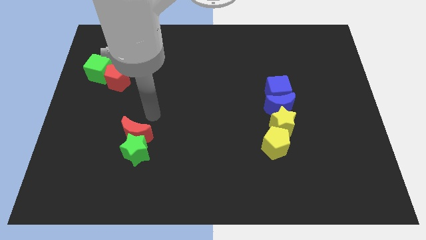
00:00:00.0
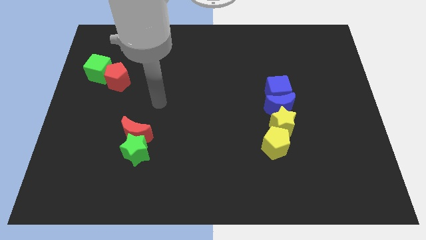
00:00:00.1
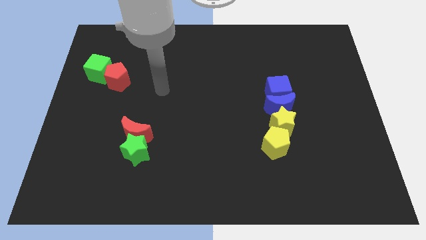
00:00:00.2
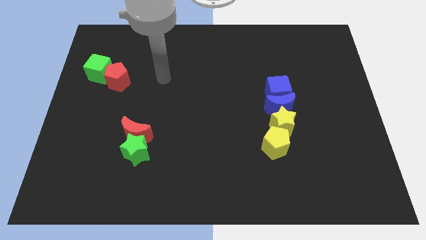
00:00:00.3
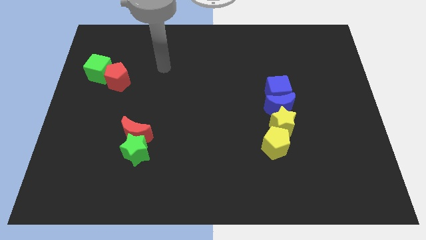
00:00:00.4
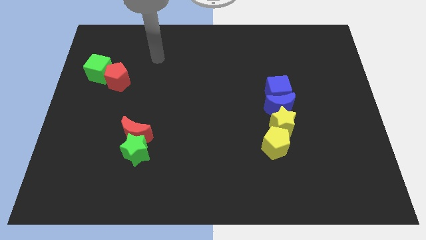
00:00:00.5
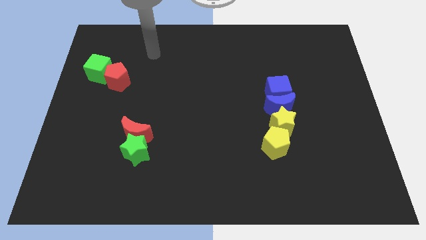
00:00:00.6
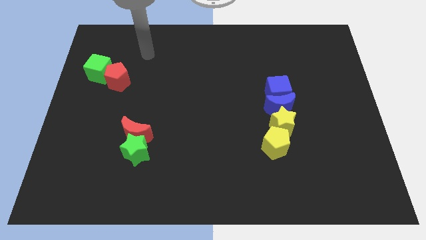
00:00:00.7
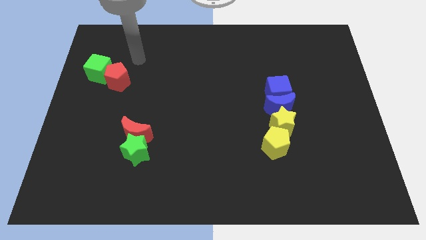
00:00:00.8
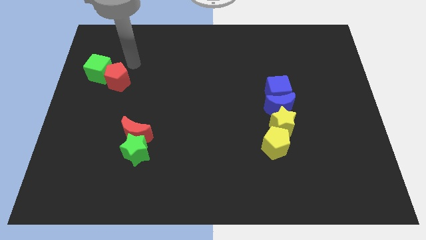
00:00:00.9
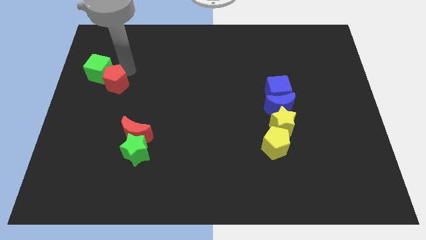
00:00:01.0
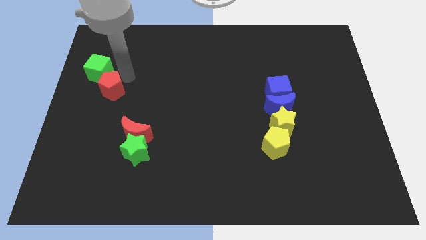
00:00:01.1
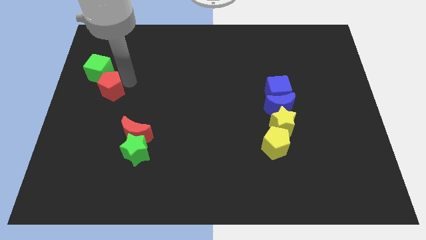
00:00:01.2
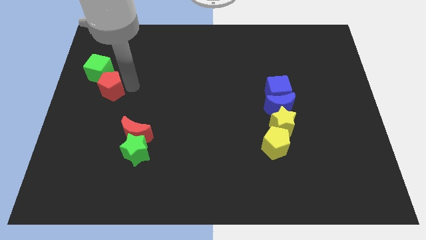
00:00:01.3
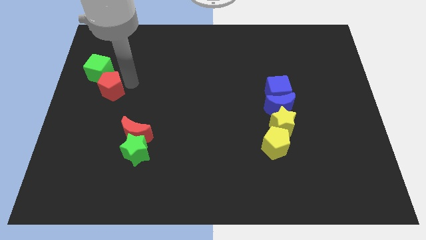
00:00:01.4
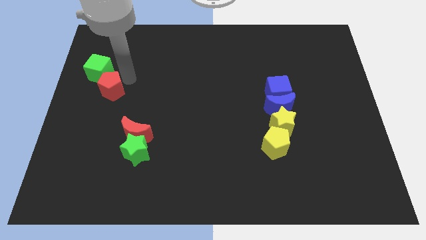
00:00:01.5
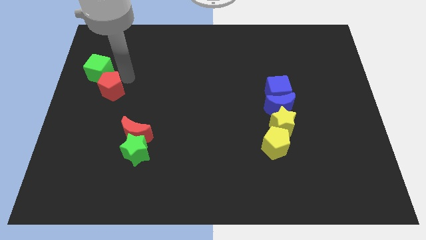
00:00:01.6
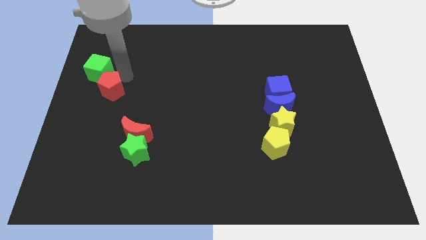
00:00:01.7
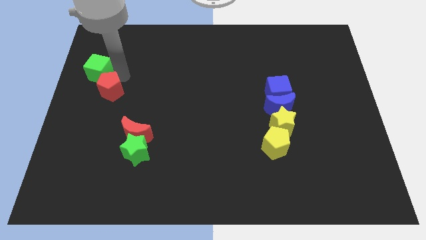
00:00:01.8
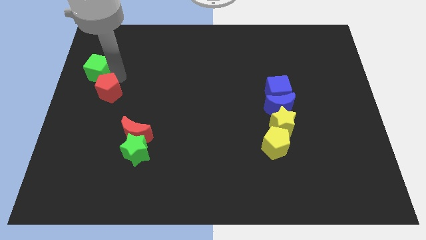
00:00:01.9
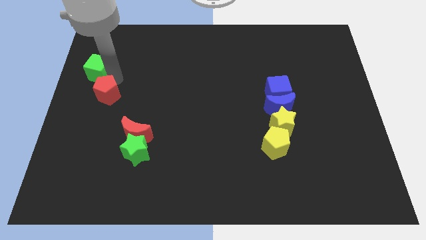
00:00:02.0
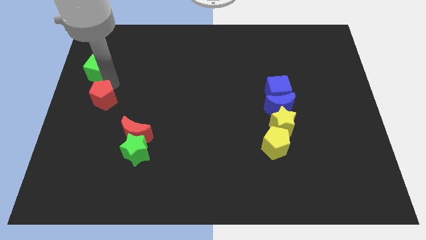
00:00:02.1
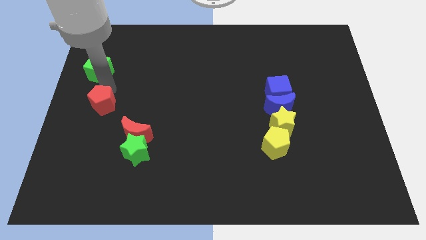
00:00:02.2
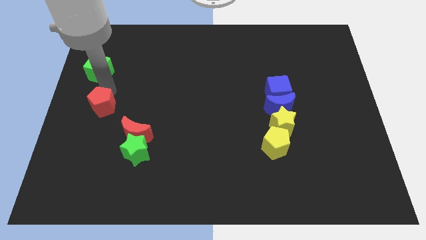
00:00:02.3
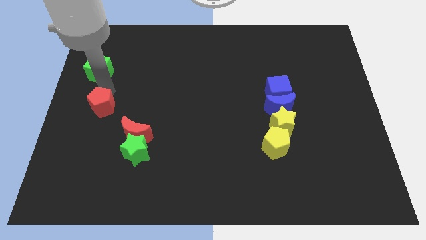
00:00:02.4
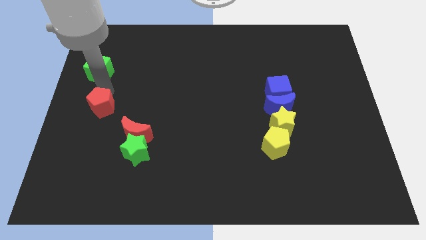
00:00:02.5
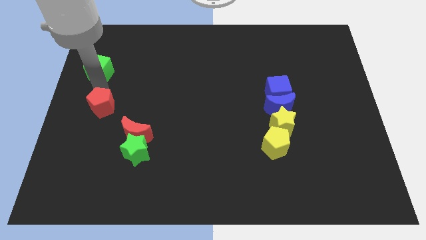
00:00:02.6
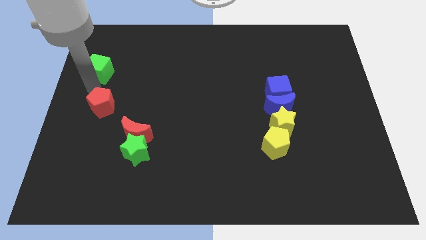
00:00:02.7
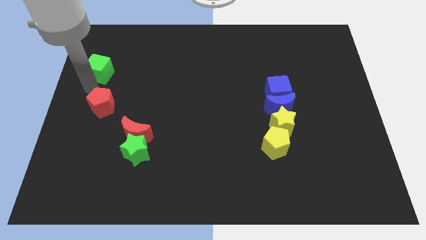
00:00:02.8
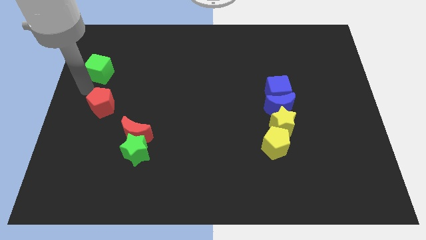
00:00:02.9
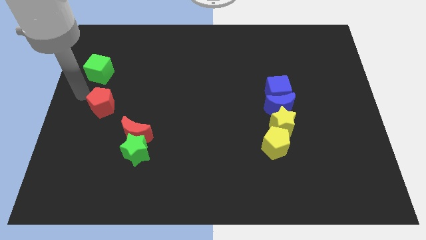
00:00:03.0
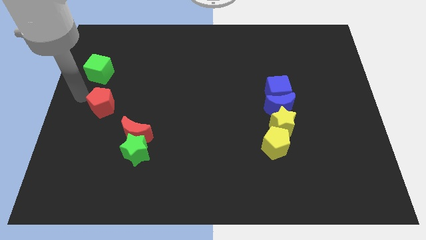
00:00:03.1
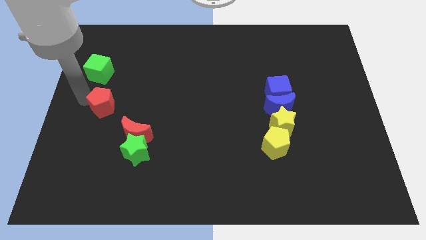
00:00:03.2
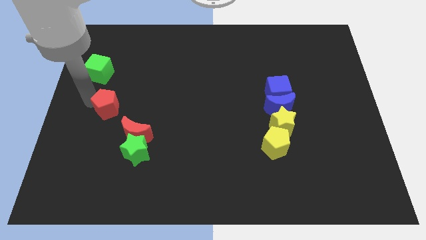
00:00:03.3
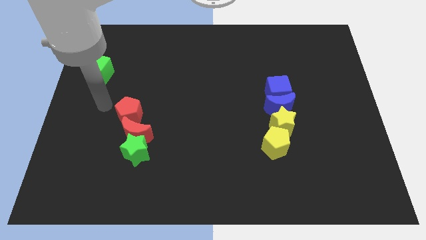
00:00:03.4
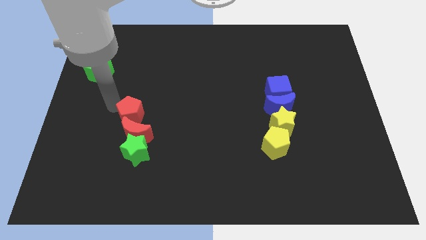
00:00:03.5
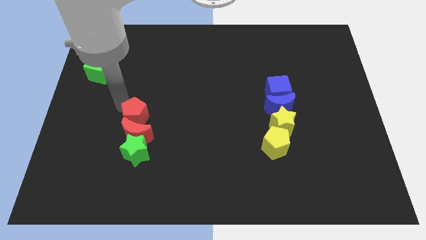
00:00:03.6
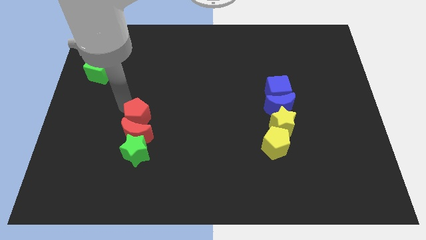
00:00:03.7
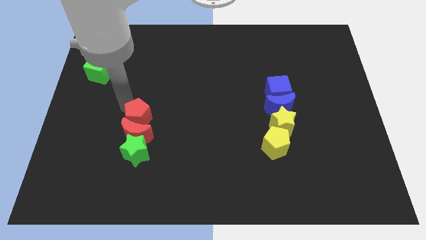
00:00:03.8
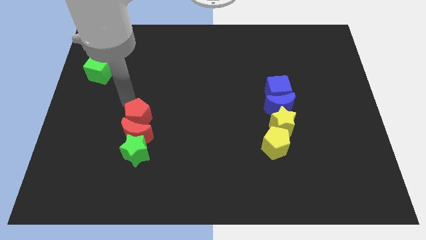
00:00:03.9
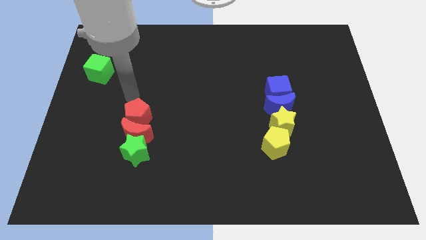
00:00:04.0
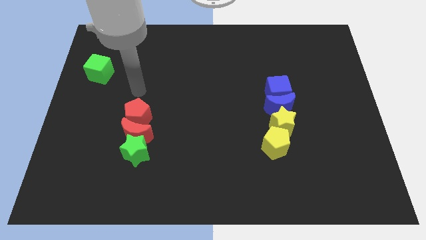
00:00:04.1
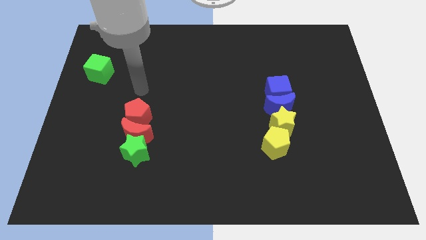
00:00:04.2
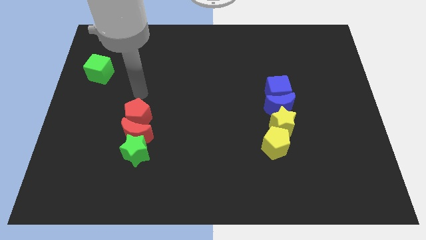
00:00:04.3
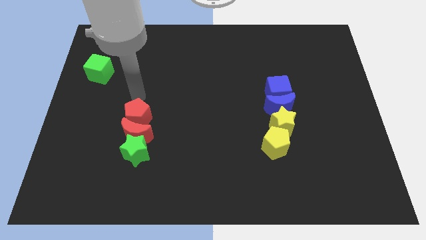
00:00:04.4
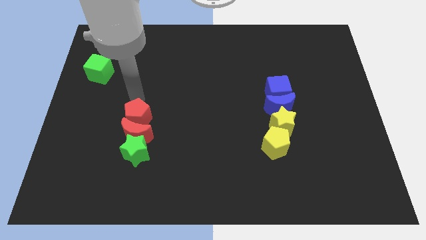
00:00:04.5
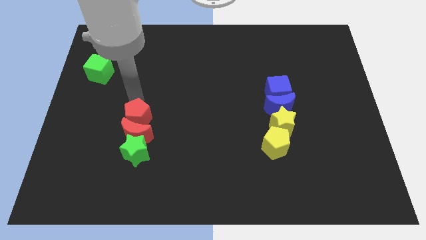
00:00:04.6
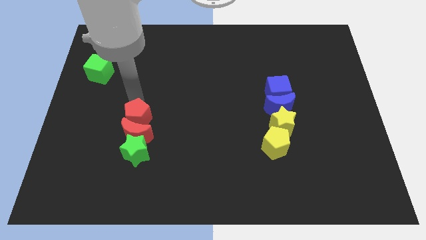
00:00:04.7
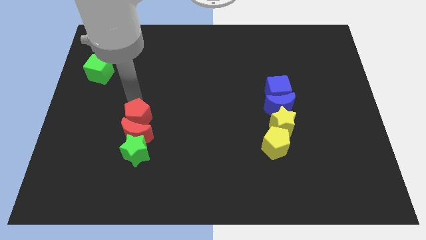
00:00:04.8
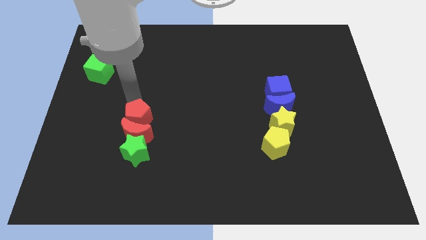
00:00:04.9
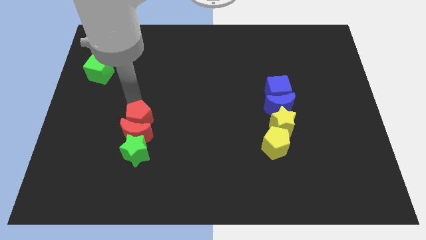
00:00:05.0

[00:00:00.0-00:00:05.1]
bring the red pentagon into the top side of the red crescent

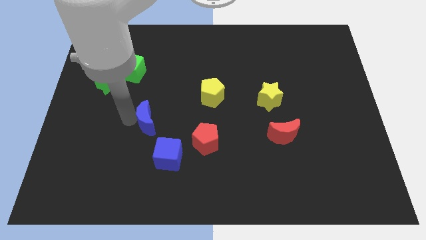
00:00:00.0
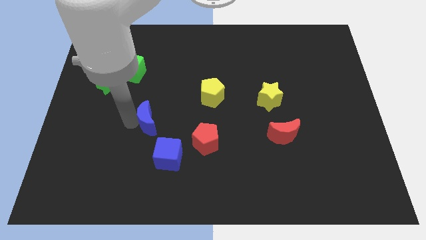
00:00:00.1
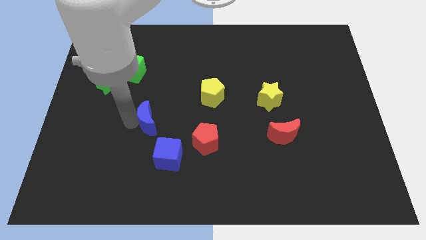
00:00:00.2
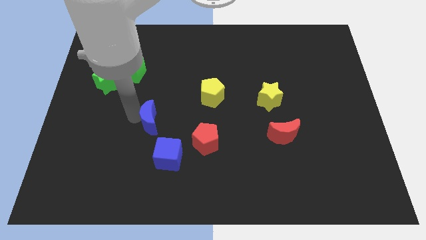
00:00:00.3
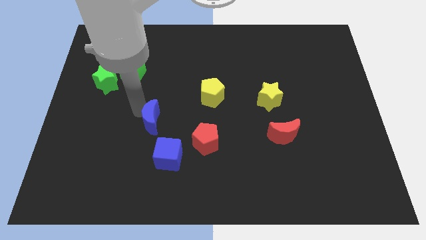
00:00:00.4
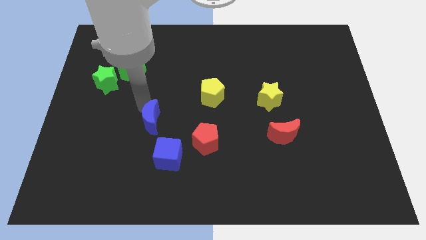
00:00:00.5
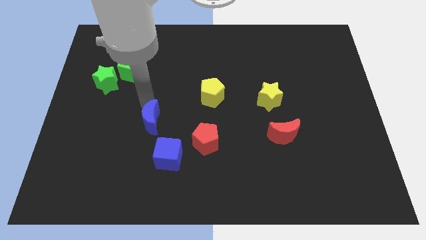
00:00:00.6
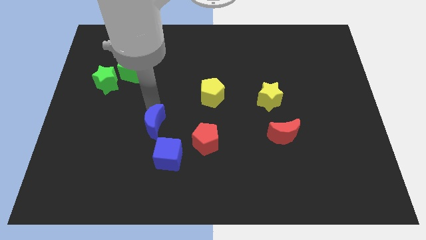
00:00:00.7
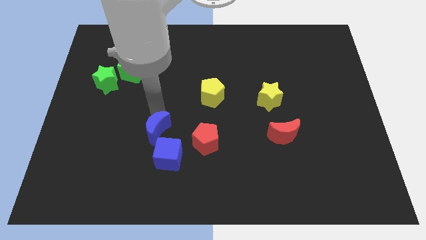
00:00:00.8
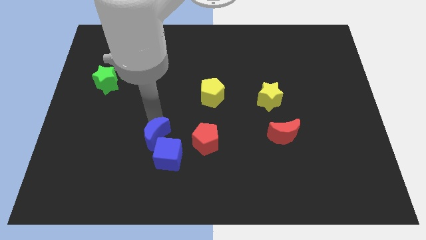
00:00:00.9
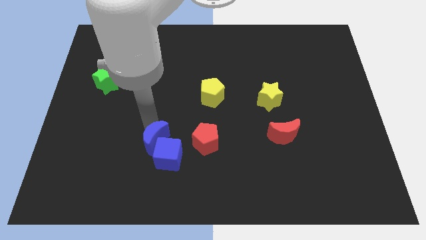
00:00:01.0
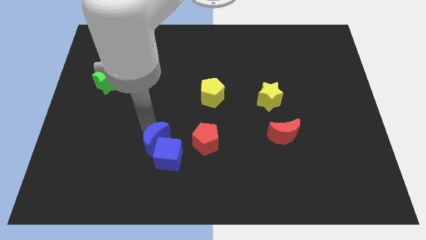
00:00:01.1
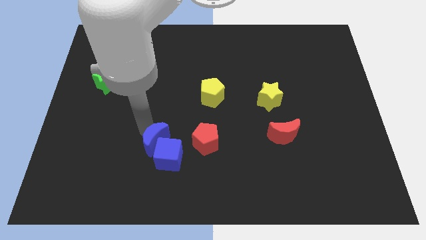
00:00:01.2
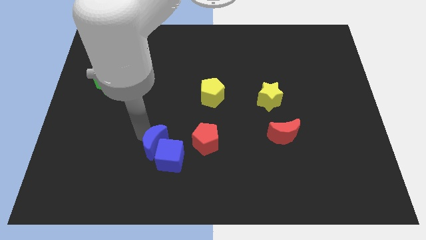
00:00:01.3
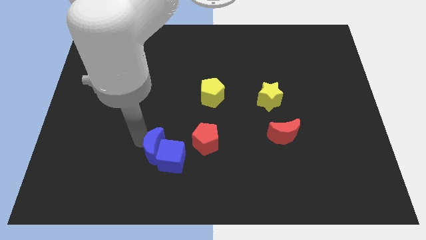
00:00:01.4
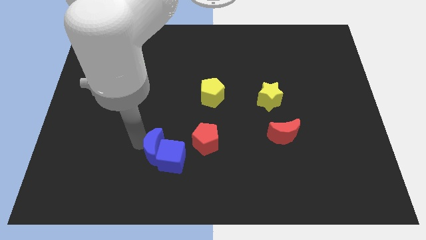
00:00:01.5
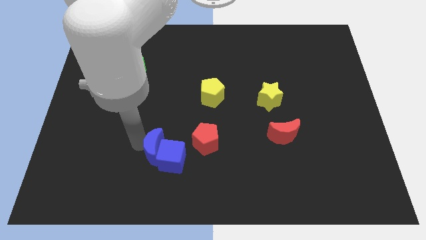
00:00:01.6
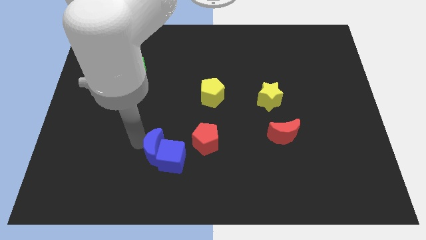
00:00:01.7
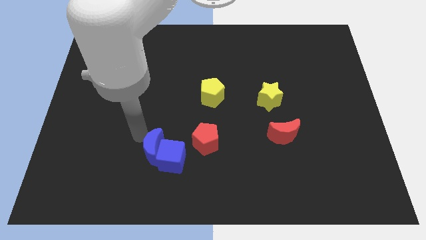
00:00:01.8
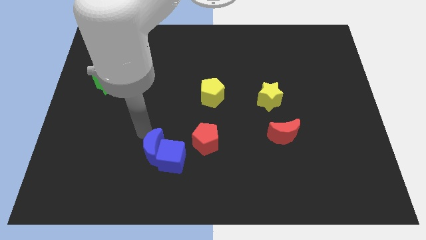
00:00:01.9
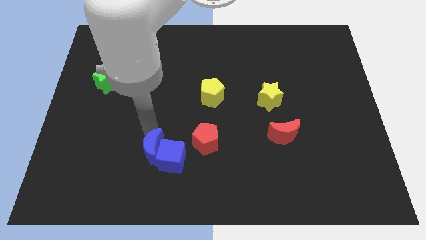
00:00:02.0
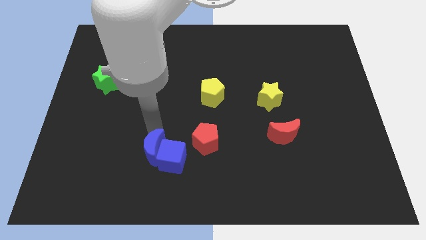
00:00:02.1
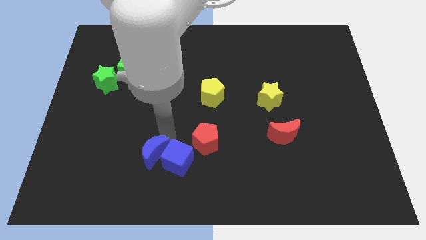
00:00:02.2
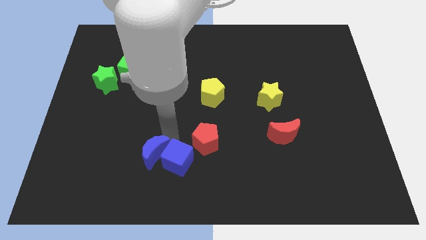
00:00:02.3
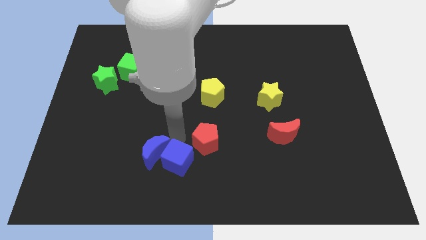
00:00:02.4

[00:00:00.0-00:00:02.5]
push the blue crescent towards the left of the blue cube

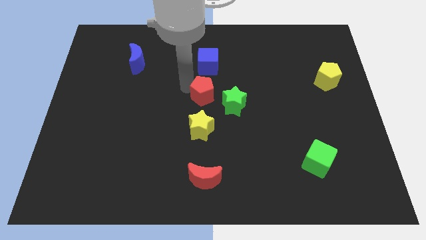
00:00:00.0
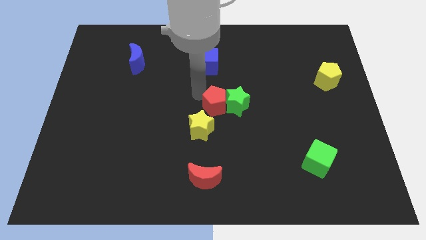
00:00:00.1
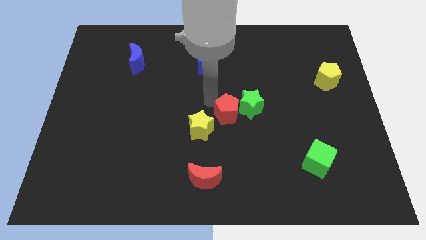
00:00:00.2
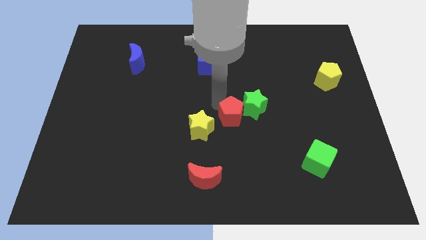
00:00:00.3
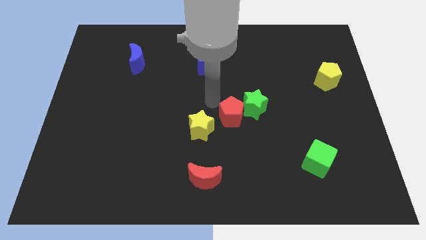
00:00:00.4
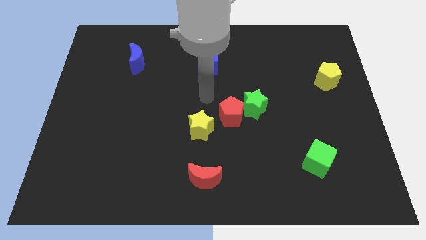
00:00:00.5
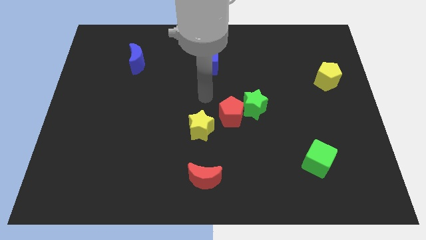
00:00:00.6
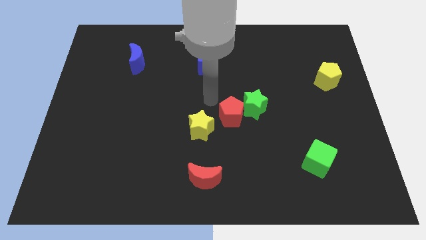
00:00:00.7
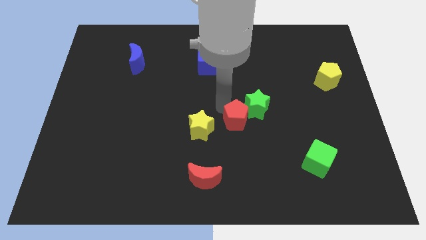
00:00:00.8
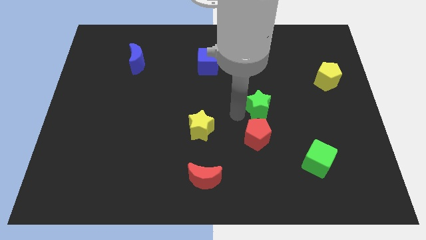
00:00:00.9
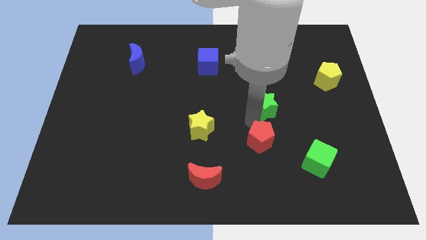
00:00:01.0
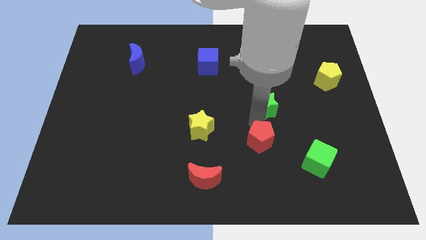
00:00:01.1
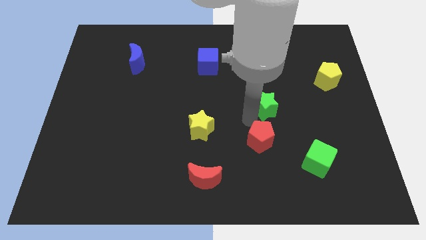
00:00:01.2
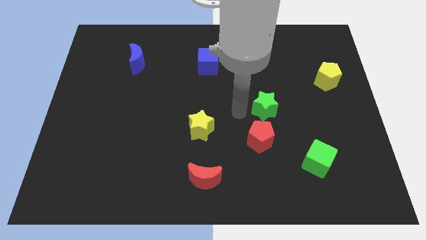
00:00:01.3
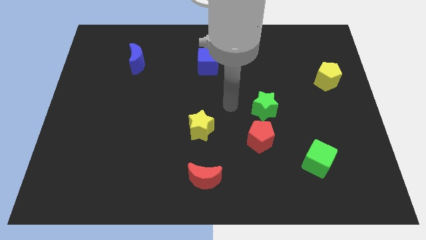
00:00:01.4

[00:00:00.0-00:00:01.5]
move the red pentagon to the bottom side of the green star
